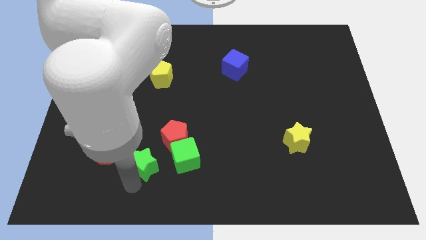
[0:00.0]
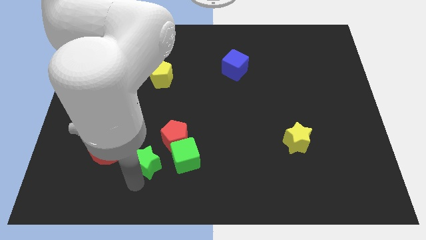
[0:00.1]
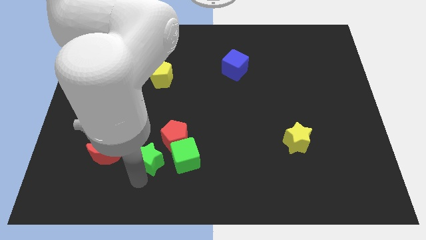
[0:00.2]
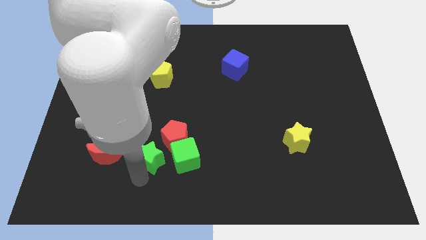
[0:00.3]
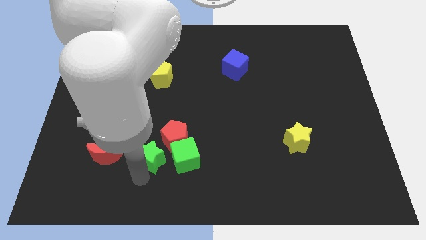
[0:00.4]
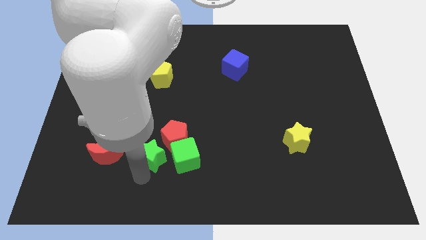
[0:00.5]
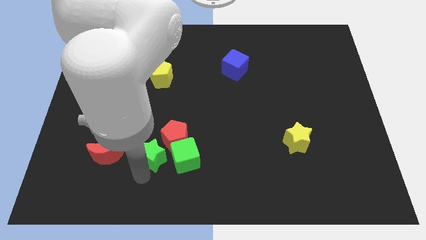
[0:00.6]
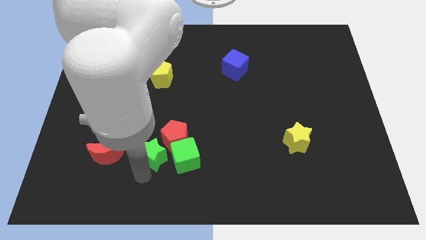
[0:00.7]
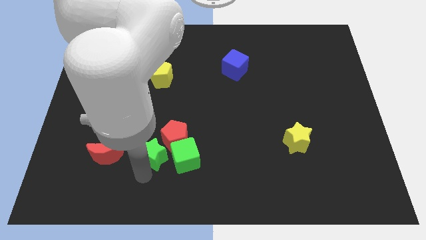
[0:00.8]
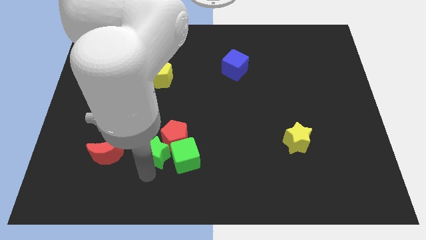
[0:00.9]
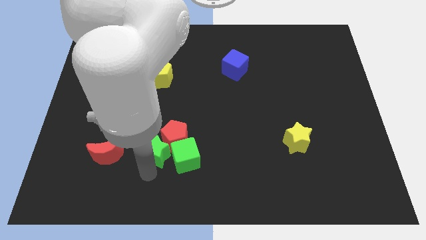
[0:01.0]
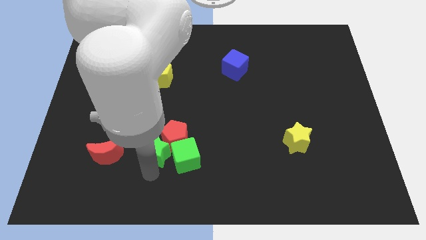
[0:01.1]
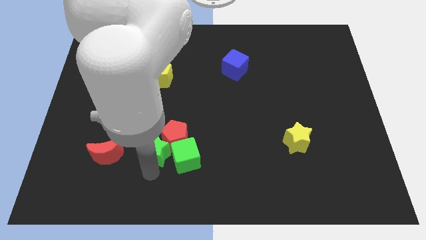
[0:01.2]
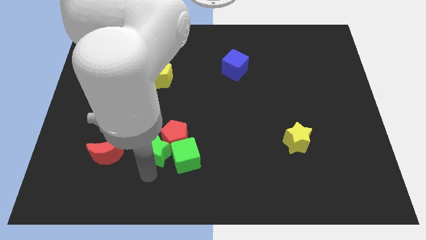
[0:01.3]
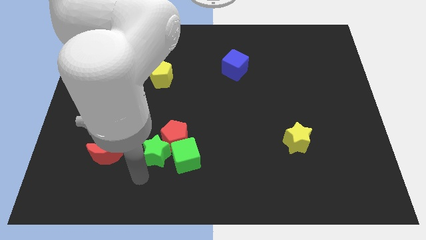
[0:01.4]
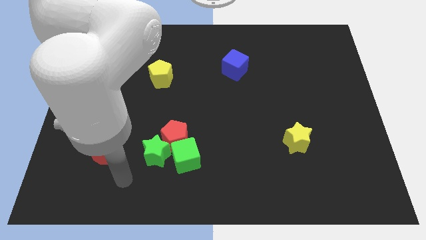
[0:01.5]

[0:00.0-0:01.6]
place the green star close to red pentagon

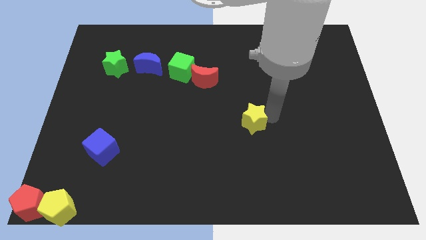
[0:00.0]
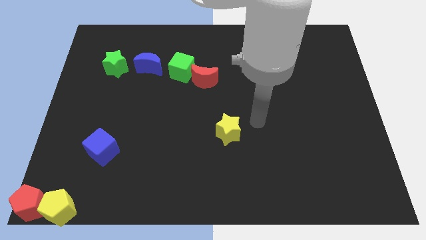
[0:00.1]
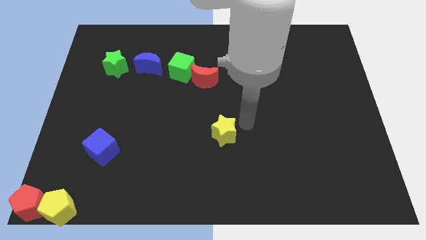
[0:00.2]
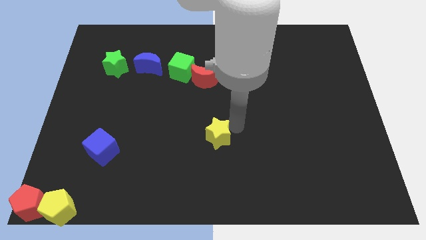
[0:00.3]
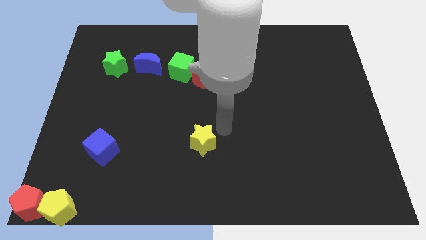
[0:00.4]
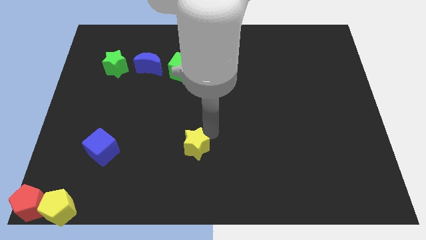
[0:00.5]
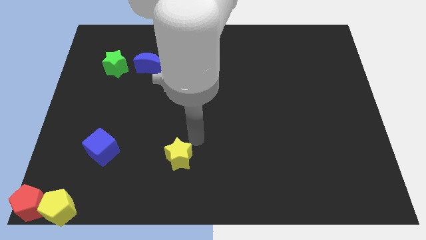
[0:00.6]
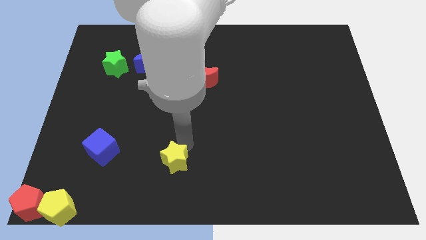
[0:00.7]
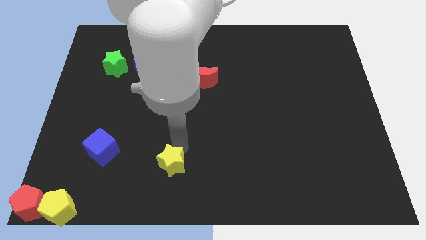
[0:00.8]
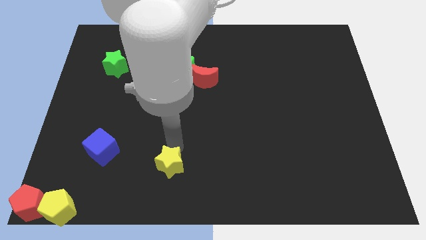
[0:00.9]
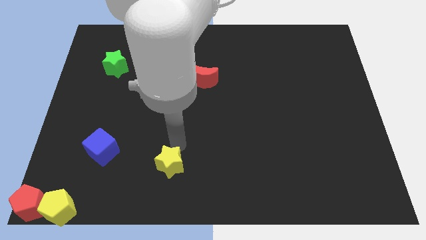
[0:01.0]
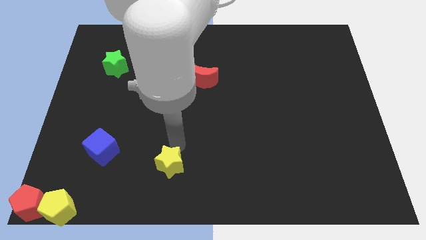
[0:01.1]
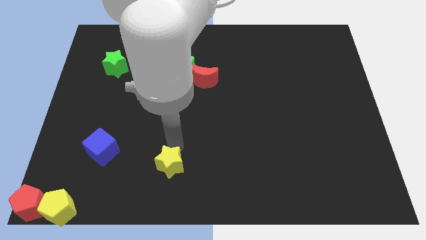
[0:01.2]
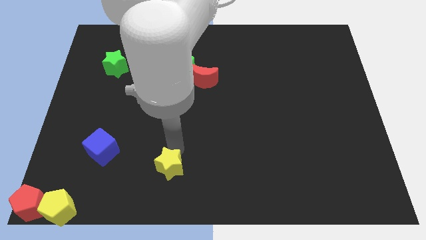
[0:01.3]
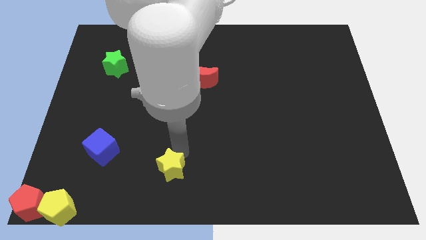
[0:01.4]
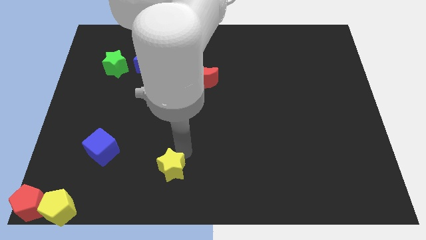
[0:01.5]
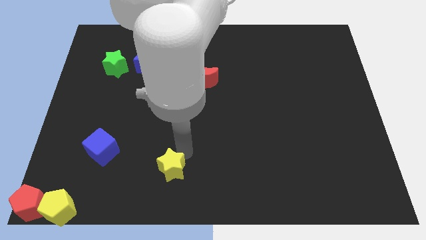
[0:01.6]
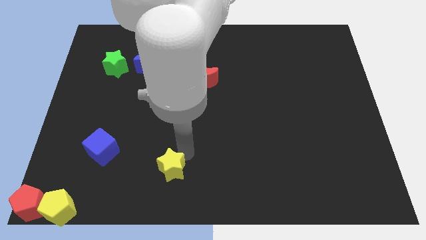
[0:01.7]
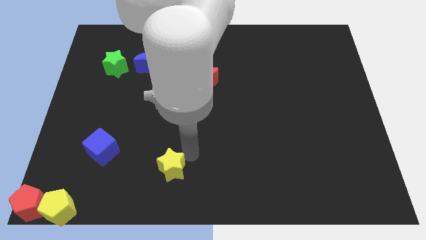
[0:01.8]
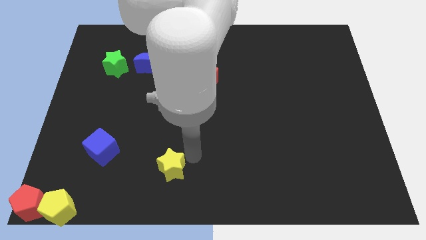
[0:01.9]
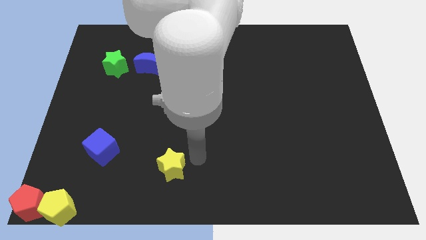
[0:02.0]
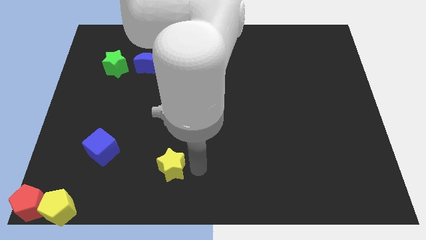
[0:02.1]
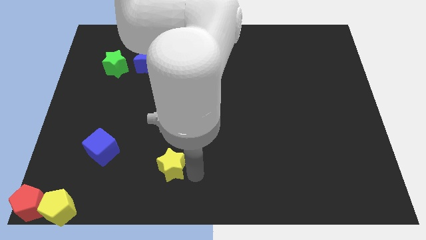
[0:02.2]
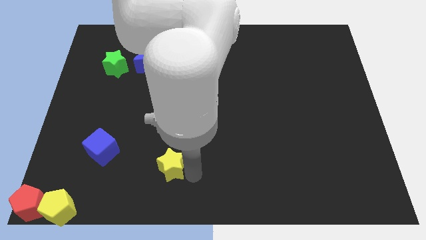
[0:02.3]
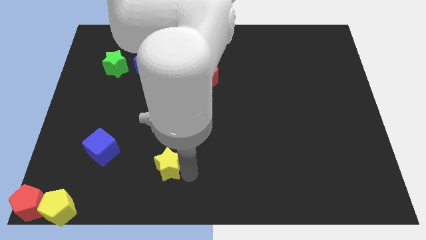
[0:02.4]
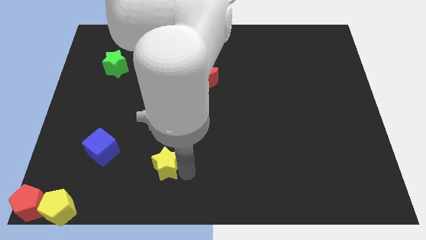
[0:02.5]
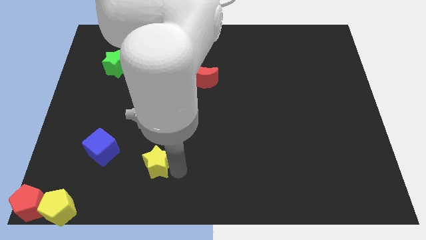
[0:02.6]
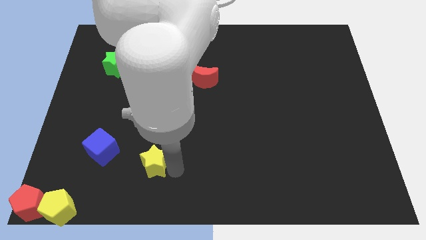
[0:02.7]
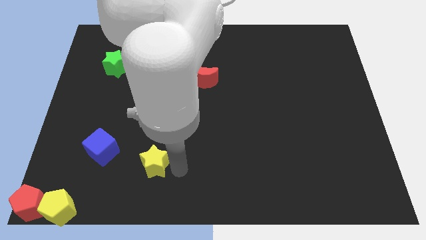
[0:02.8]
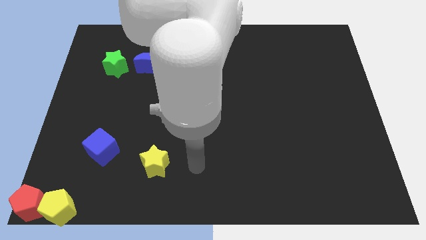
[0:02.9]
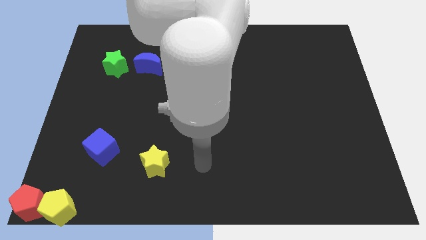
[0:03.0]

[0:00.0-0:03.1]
move the yellow star towards right side of the blue cube

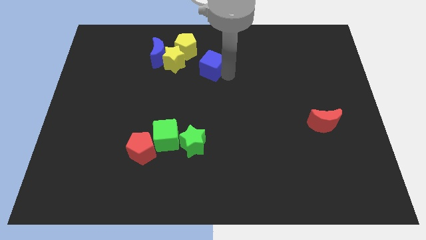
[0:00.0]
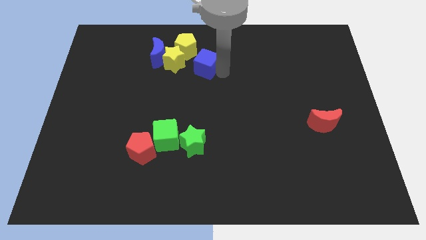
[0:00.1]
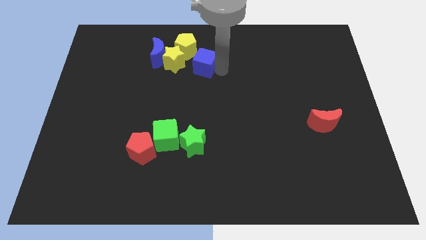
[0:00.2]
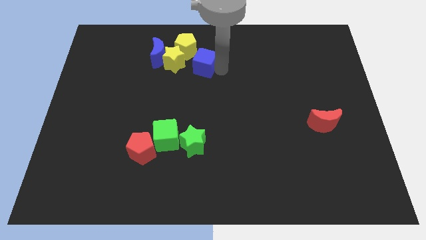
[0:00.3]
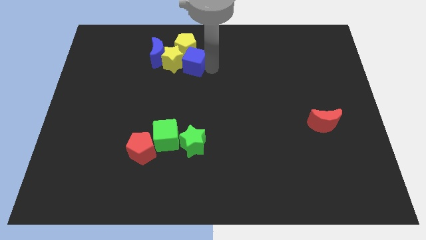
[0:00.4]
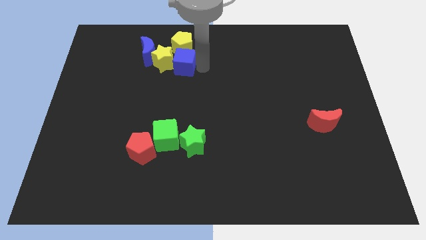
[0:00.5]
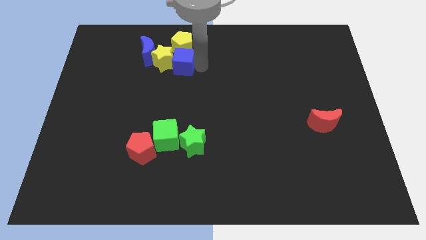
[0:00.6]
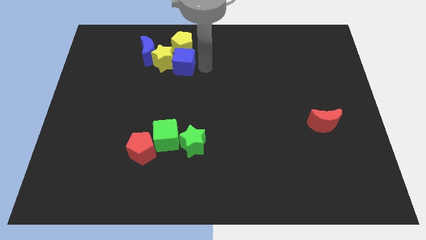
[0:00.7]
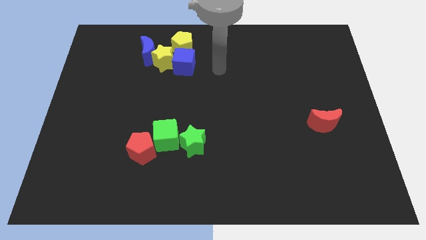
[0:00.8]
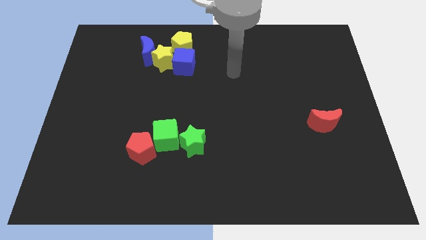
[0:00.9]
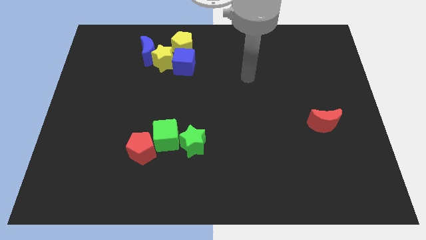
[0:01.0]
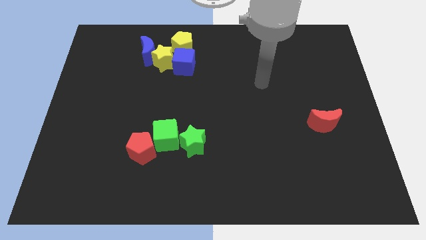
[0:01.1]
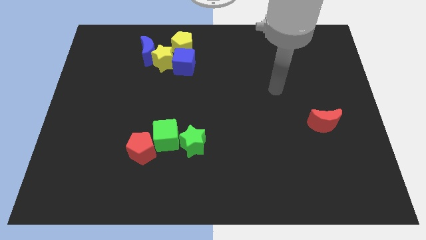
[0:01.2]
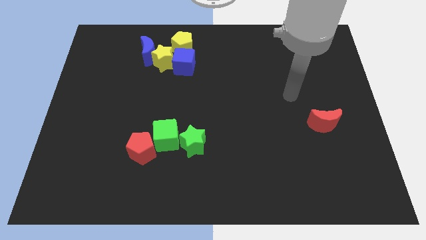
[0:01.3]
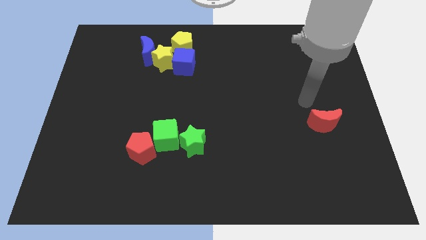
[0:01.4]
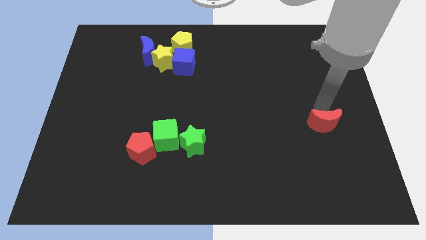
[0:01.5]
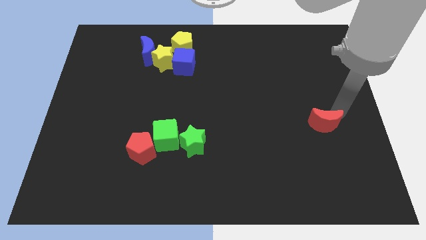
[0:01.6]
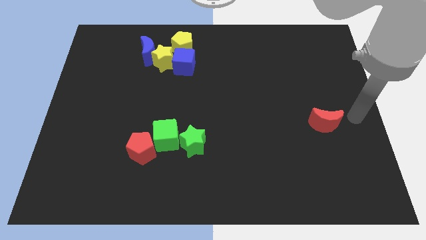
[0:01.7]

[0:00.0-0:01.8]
move the hand towards the center right

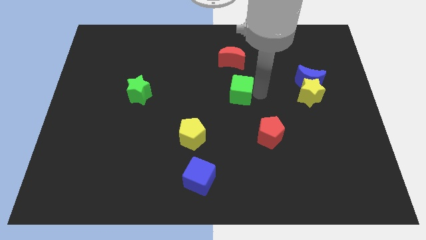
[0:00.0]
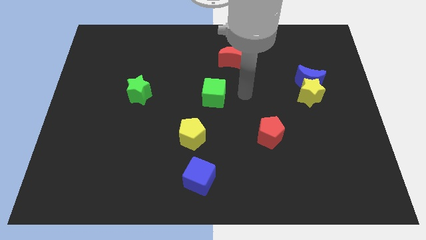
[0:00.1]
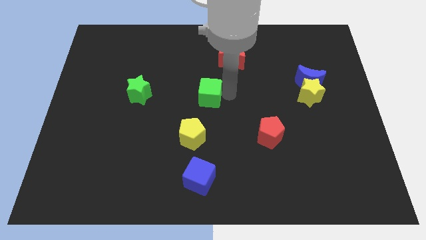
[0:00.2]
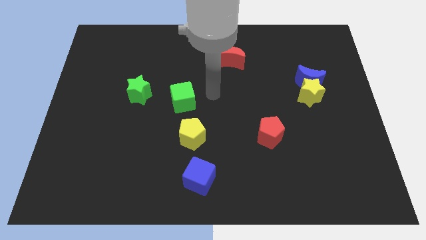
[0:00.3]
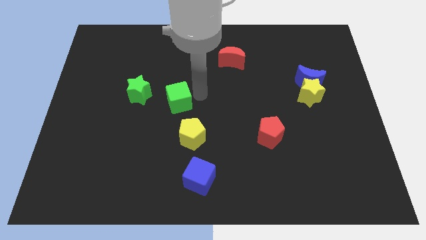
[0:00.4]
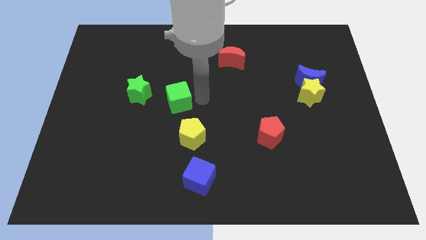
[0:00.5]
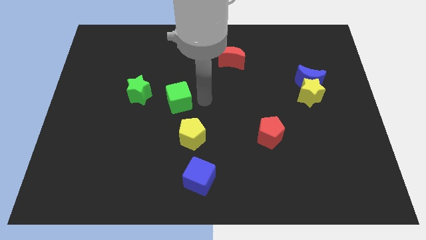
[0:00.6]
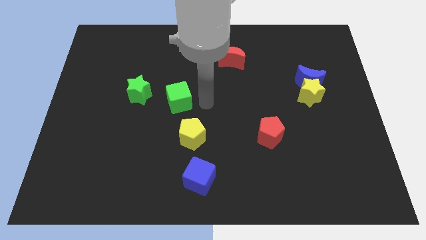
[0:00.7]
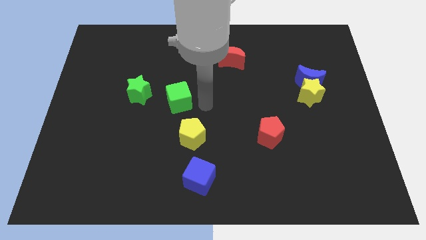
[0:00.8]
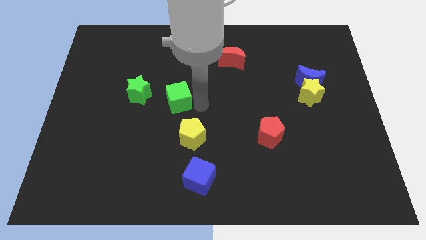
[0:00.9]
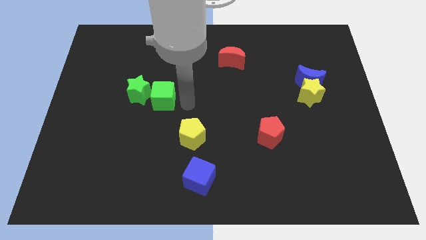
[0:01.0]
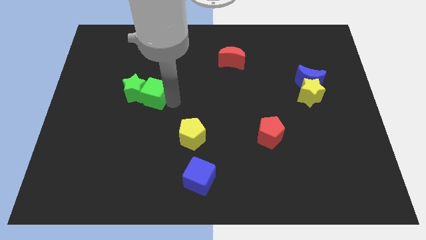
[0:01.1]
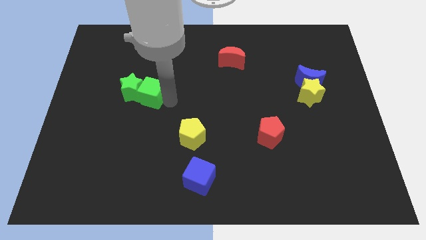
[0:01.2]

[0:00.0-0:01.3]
bring the green cube into the right side of the green star

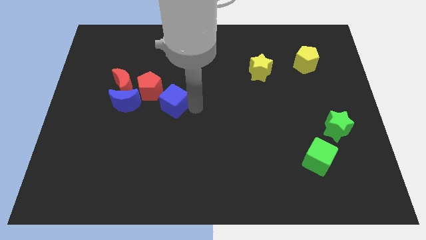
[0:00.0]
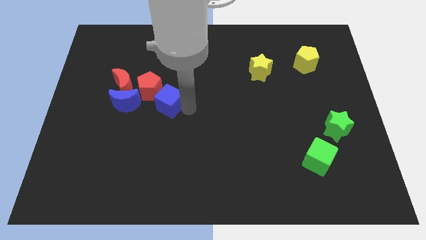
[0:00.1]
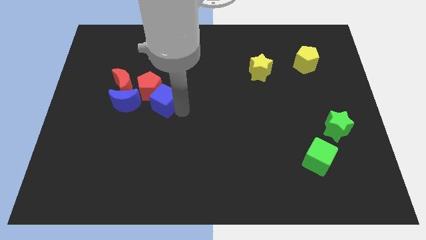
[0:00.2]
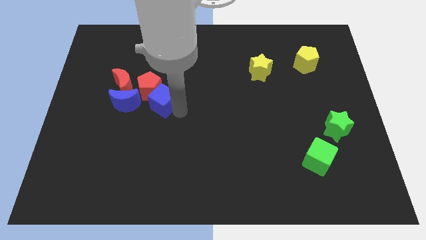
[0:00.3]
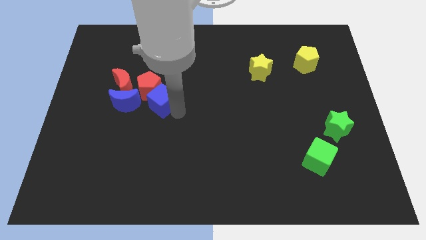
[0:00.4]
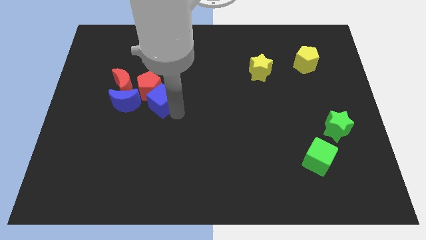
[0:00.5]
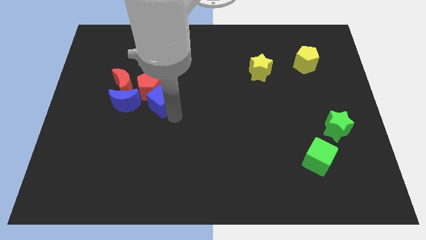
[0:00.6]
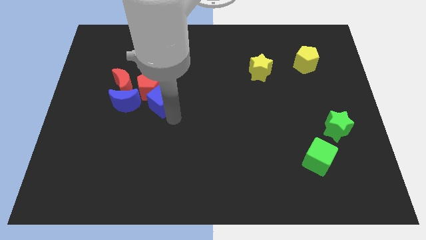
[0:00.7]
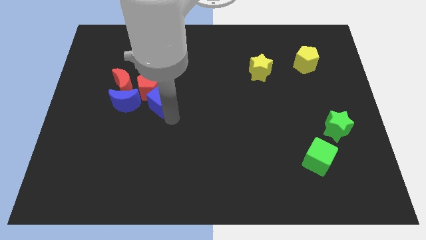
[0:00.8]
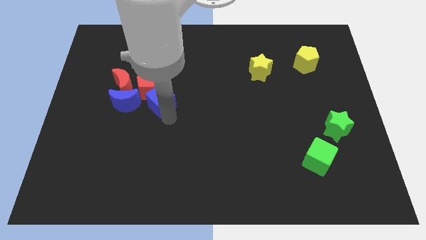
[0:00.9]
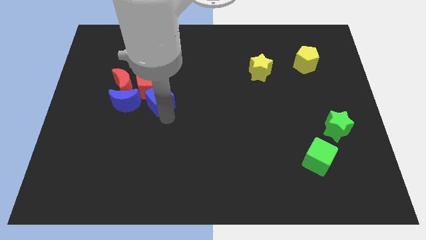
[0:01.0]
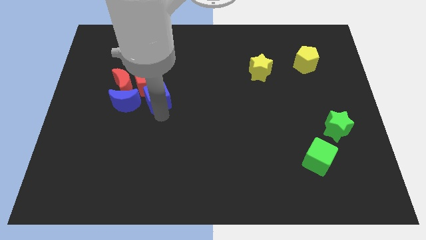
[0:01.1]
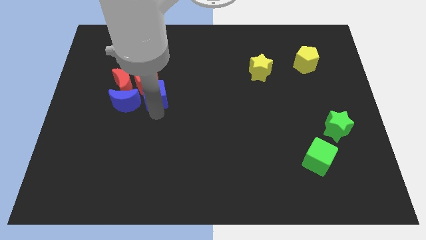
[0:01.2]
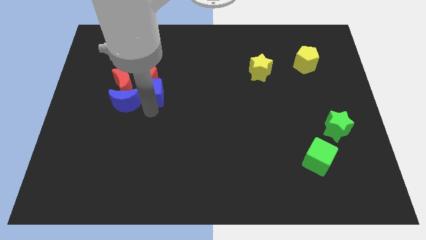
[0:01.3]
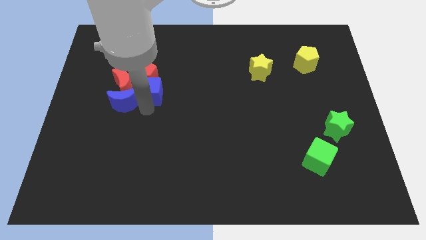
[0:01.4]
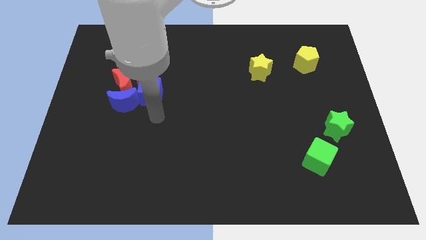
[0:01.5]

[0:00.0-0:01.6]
push blue cube into the group of blocks
